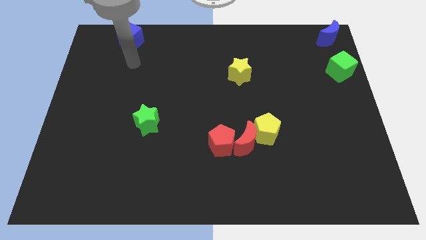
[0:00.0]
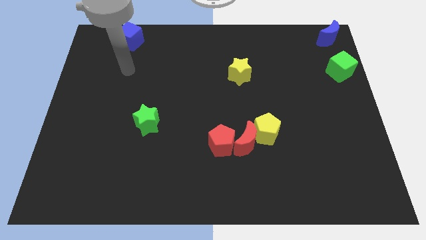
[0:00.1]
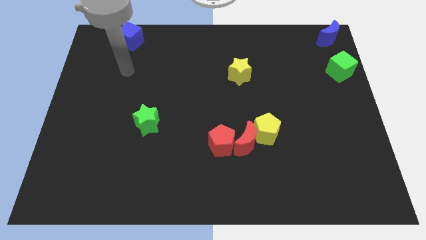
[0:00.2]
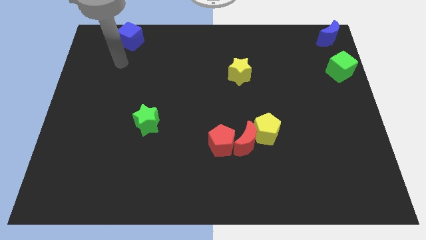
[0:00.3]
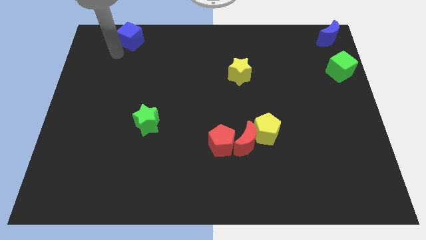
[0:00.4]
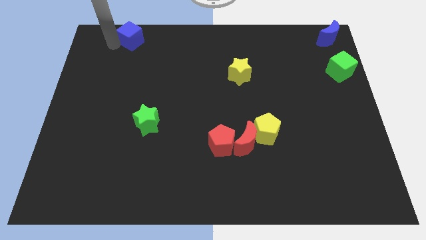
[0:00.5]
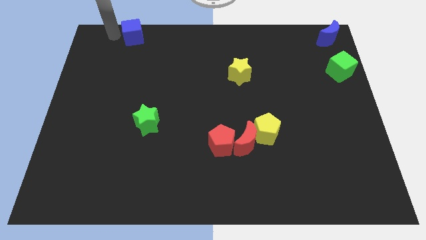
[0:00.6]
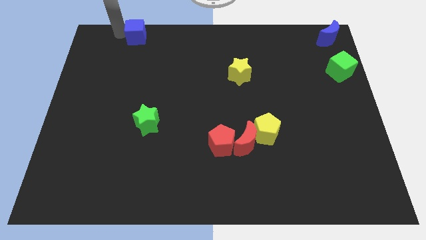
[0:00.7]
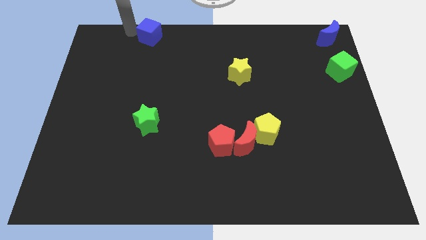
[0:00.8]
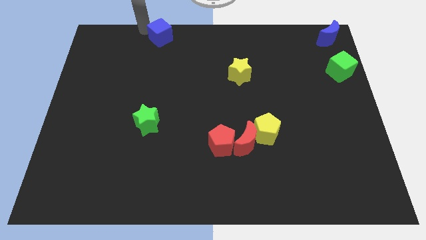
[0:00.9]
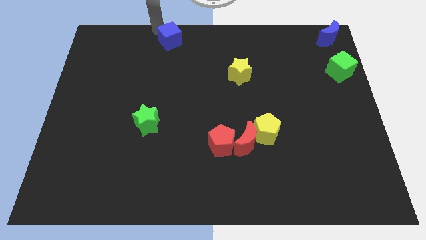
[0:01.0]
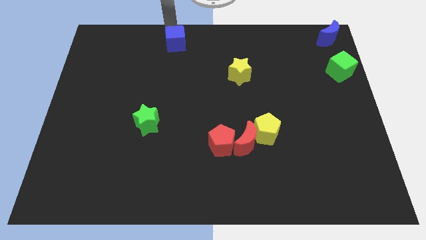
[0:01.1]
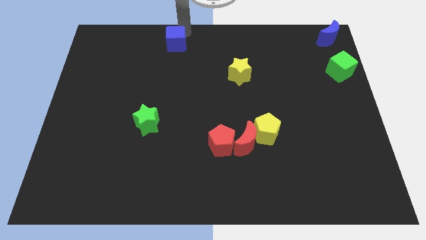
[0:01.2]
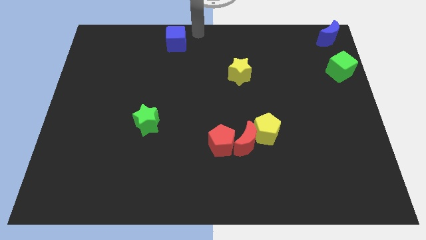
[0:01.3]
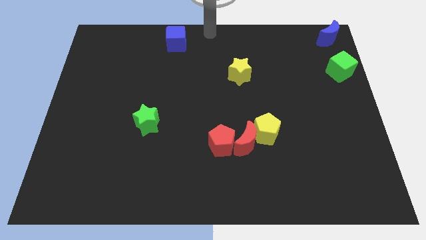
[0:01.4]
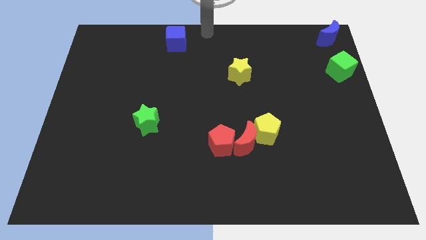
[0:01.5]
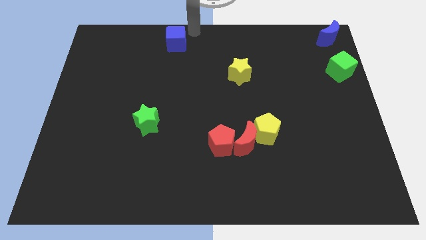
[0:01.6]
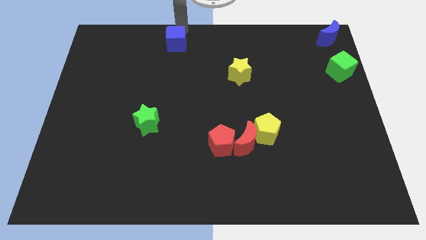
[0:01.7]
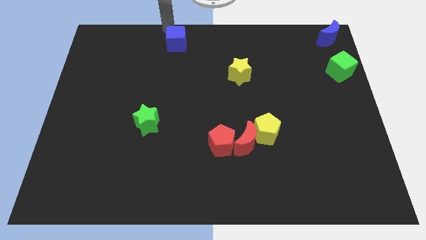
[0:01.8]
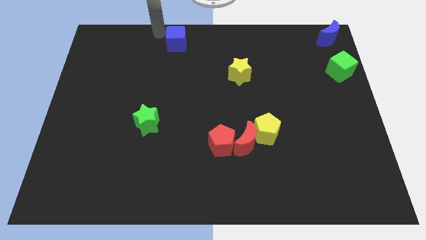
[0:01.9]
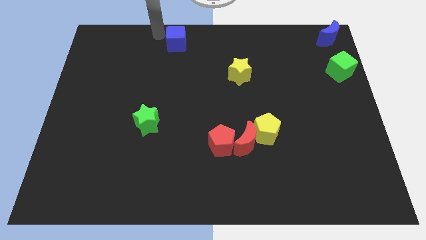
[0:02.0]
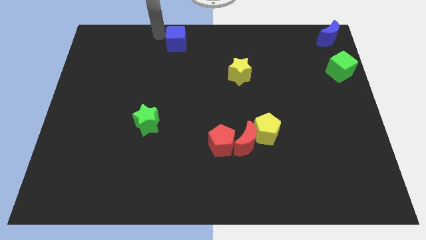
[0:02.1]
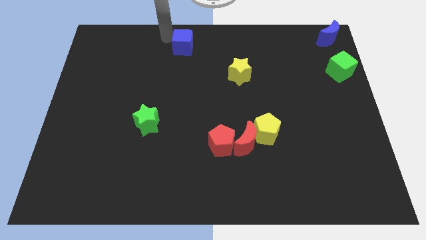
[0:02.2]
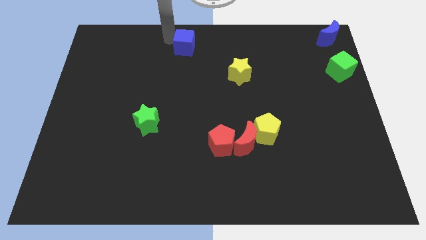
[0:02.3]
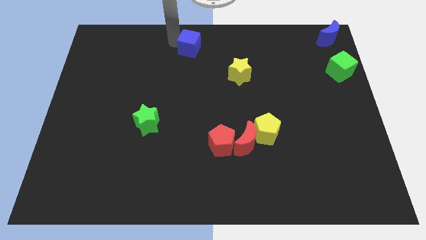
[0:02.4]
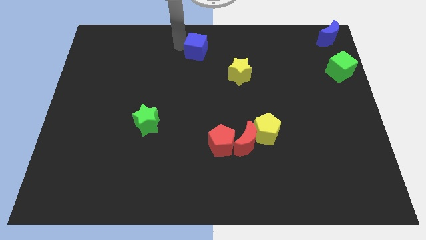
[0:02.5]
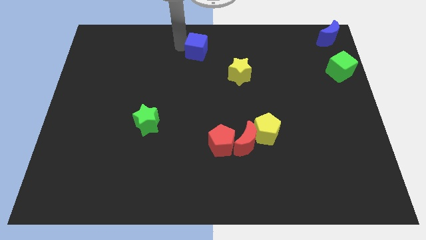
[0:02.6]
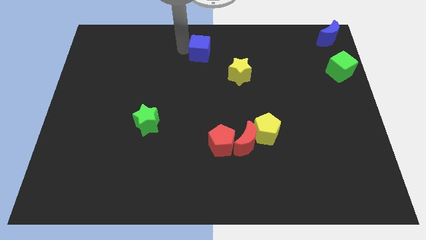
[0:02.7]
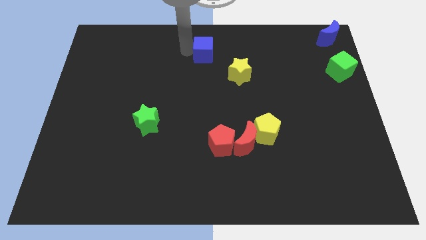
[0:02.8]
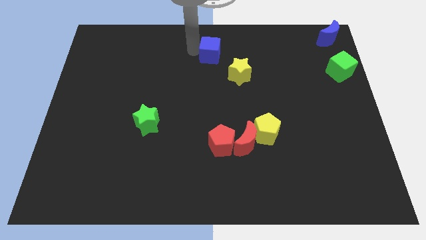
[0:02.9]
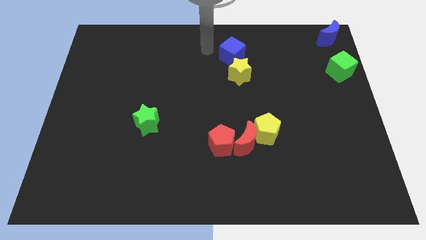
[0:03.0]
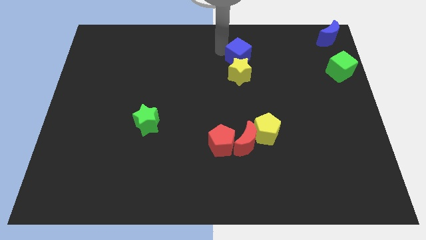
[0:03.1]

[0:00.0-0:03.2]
place the blue cube vertically above the yellow star

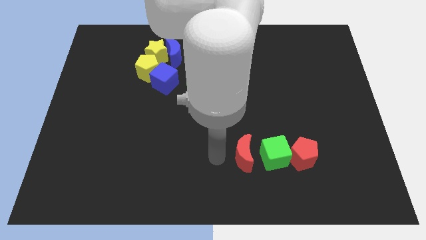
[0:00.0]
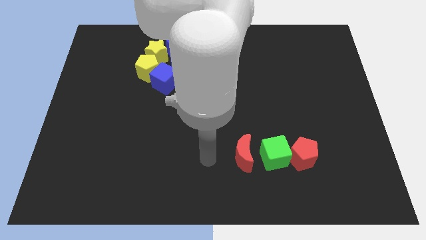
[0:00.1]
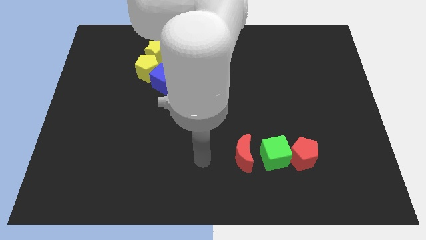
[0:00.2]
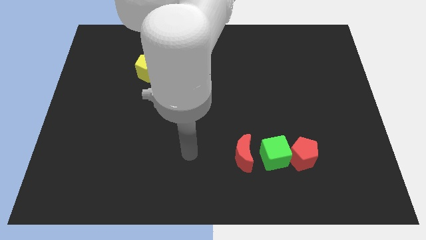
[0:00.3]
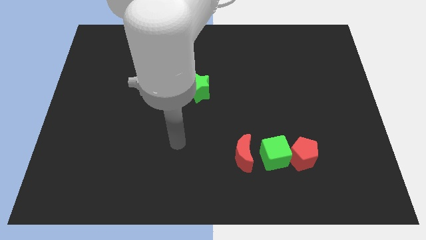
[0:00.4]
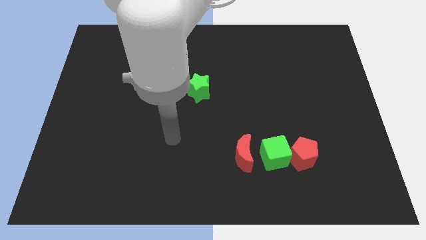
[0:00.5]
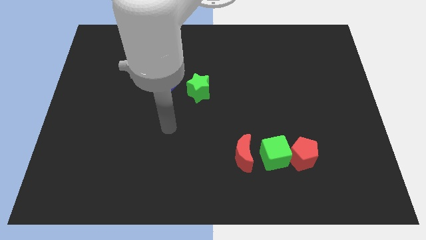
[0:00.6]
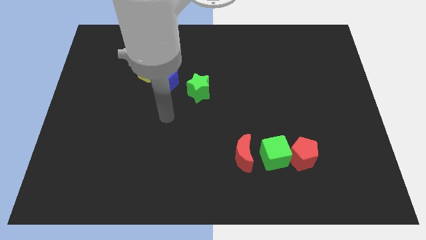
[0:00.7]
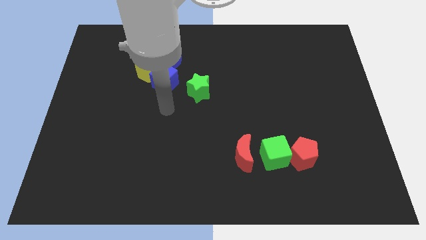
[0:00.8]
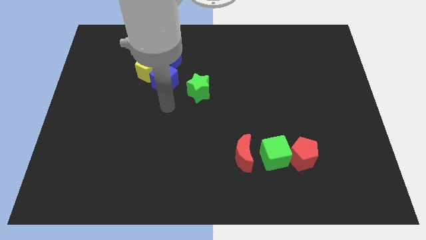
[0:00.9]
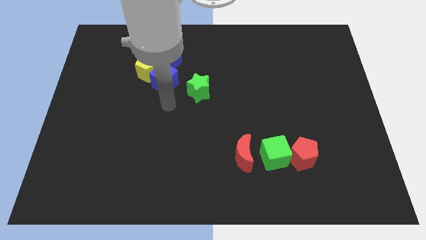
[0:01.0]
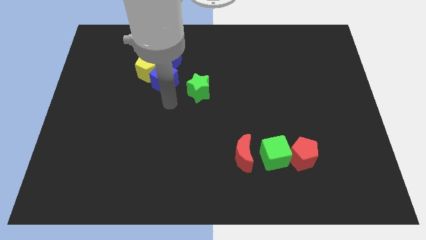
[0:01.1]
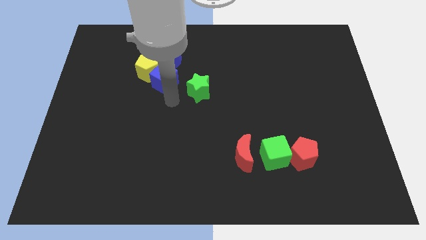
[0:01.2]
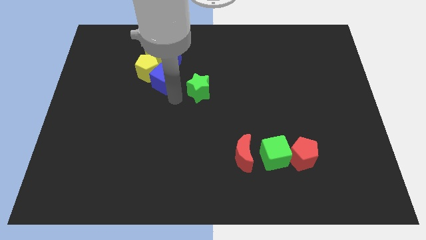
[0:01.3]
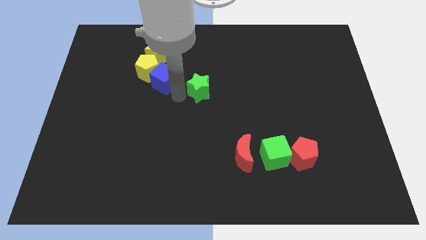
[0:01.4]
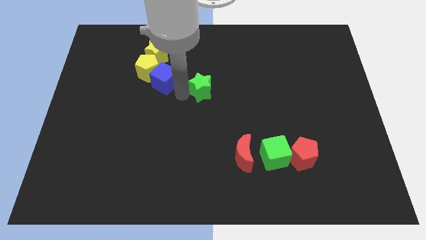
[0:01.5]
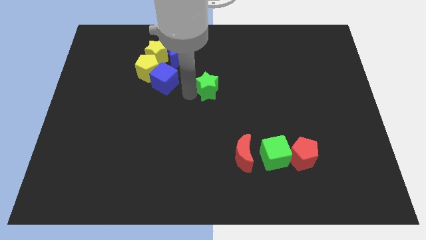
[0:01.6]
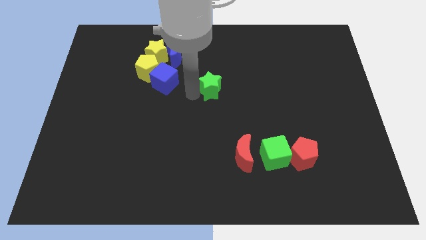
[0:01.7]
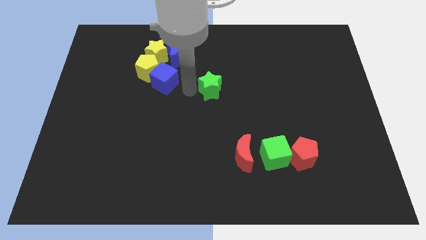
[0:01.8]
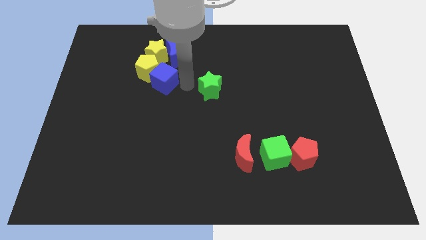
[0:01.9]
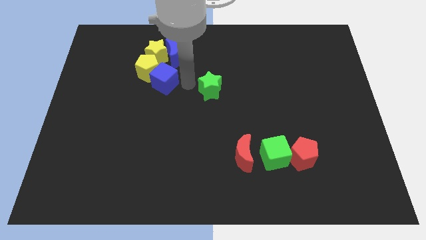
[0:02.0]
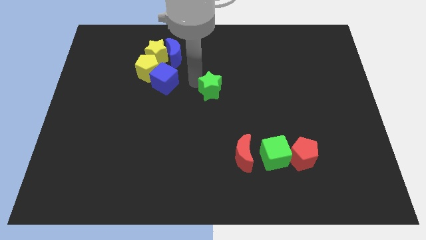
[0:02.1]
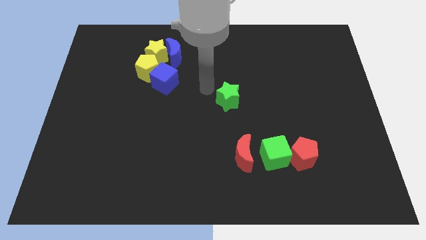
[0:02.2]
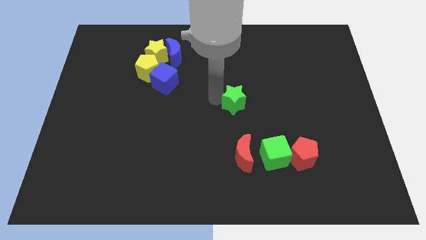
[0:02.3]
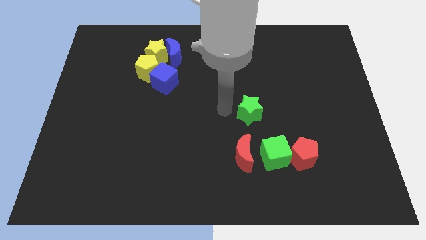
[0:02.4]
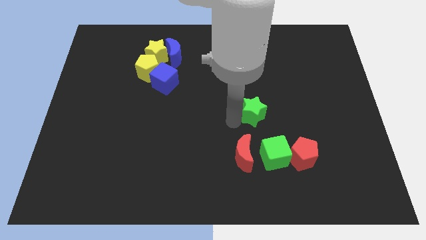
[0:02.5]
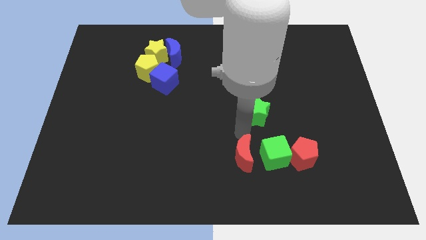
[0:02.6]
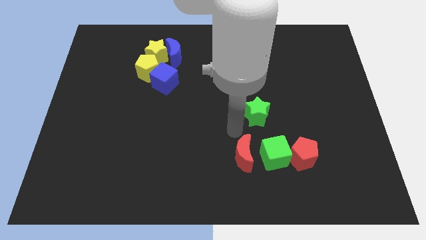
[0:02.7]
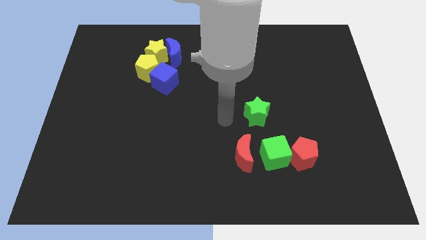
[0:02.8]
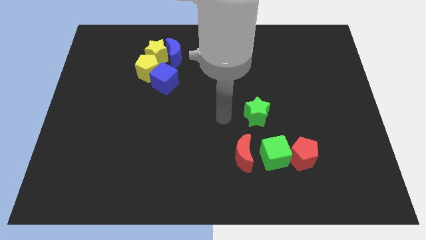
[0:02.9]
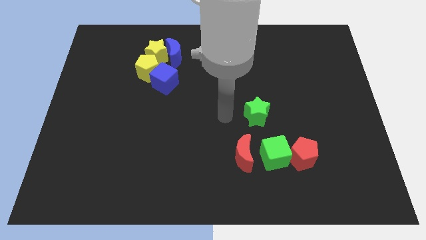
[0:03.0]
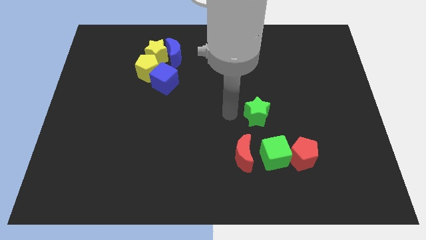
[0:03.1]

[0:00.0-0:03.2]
place the green star above the green cube

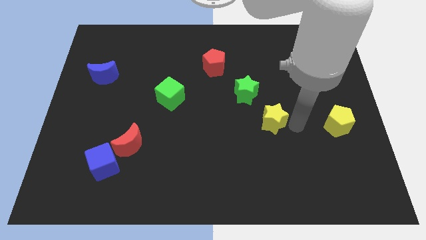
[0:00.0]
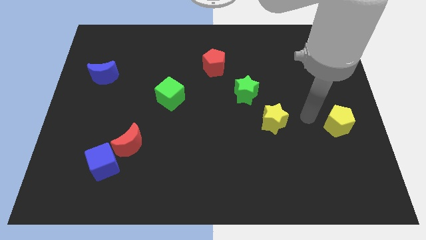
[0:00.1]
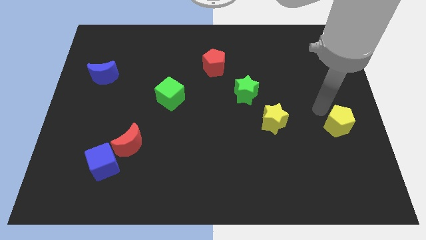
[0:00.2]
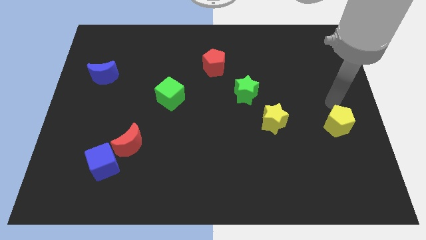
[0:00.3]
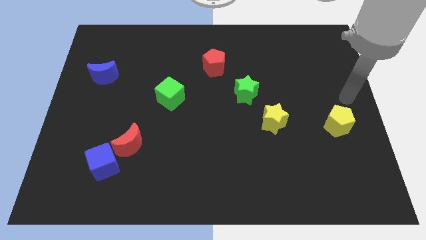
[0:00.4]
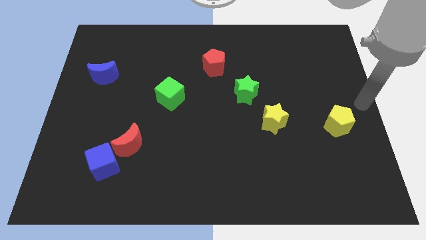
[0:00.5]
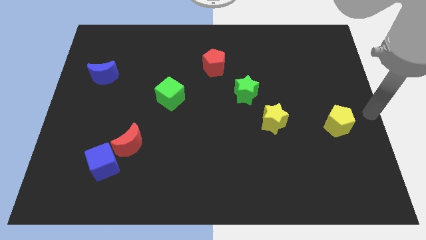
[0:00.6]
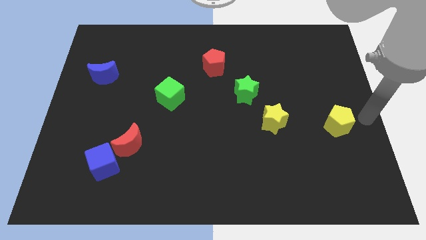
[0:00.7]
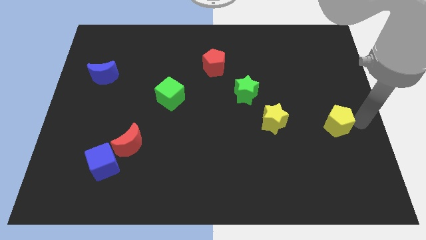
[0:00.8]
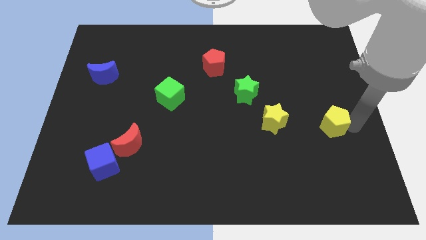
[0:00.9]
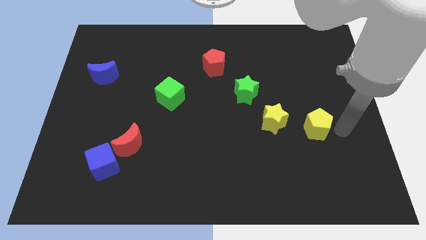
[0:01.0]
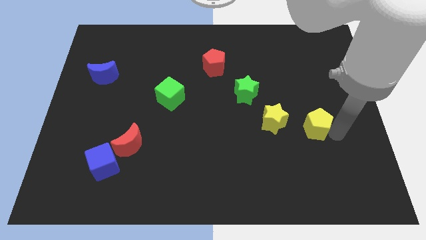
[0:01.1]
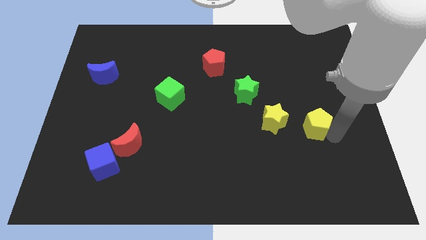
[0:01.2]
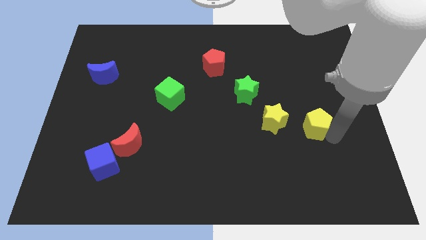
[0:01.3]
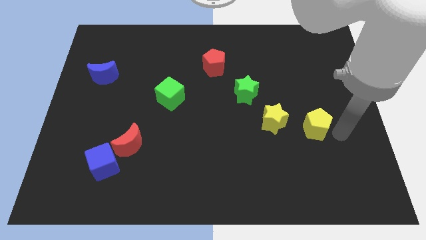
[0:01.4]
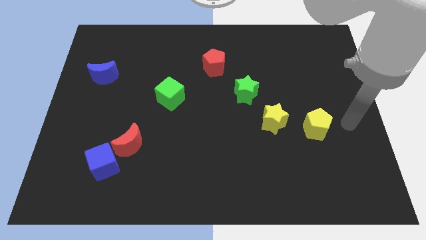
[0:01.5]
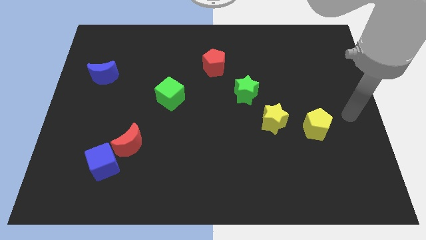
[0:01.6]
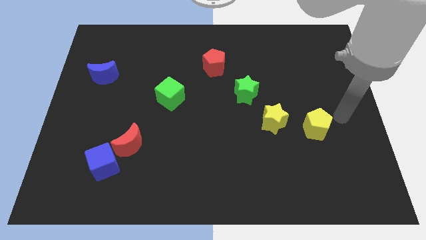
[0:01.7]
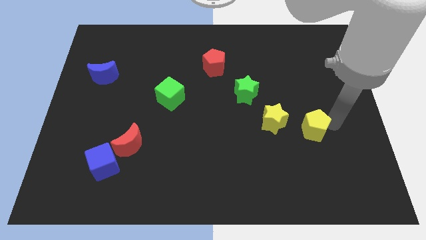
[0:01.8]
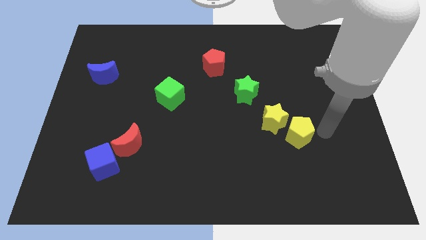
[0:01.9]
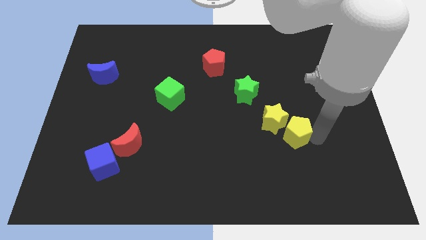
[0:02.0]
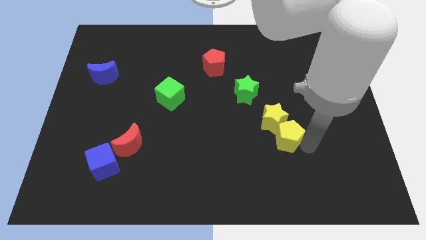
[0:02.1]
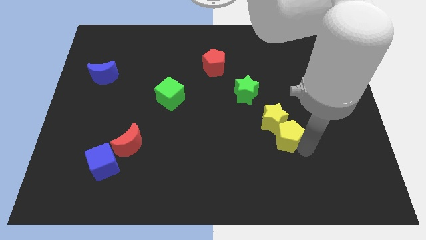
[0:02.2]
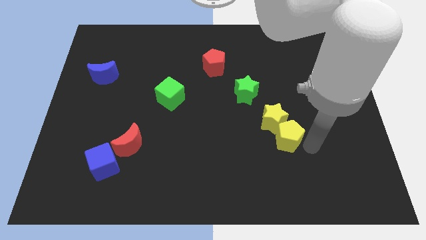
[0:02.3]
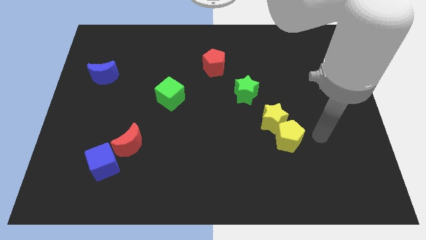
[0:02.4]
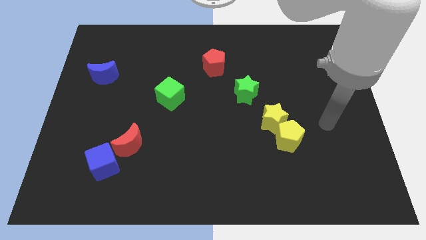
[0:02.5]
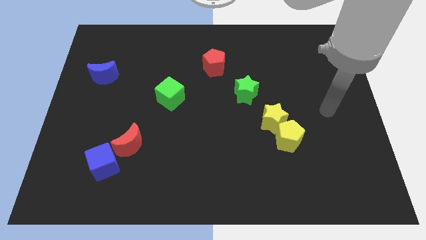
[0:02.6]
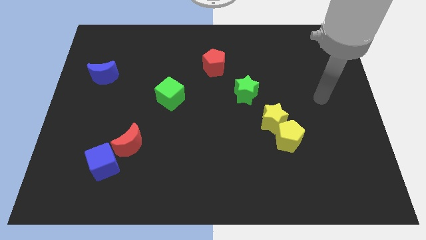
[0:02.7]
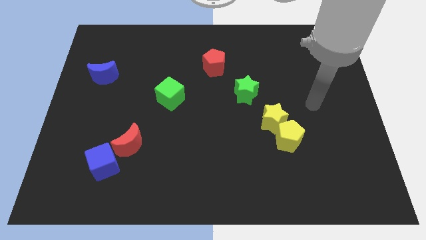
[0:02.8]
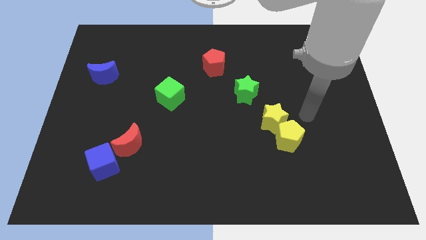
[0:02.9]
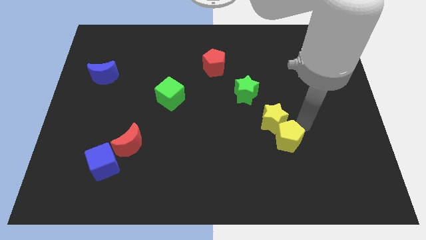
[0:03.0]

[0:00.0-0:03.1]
push the yellow pentagon into the yellow star
